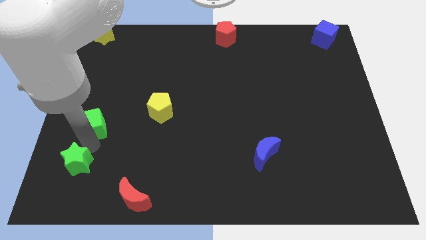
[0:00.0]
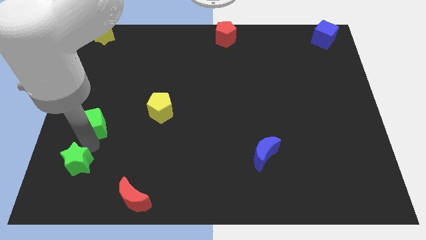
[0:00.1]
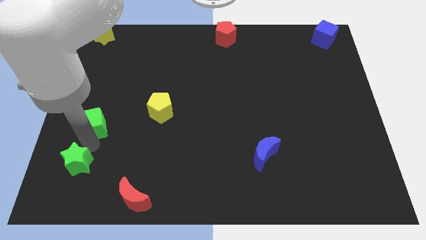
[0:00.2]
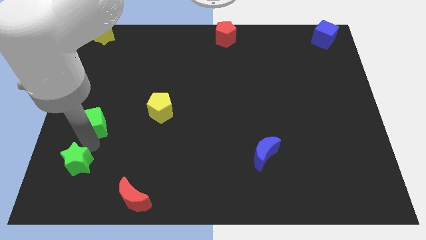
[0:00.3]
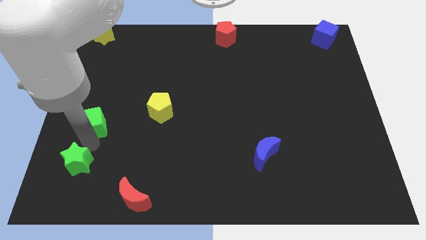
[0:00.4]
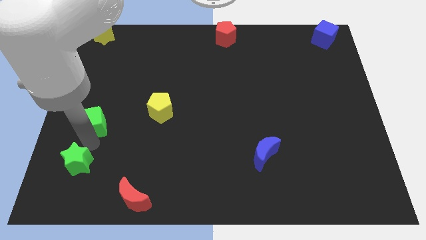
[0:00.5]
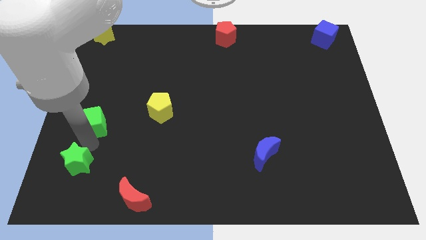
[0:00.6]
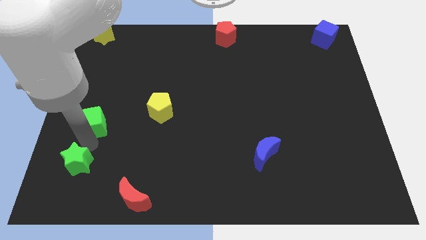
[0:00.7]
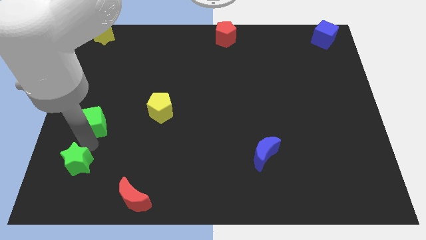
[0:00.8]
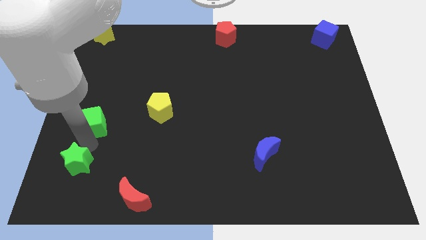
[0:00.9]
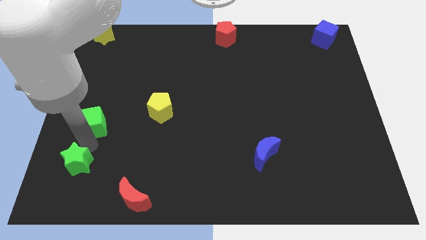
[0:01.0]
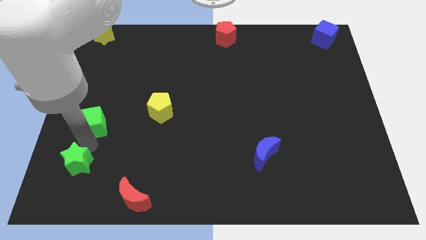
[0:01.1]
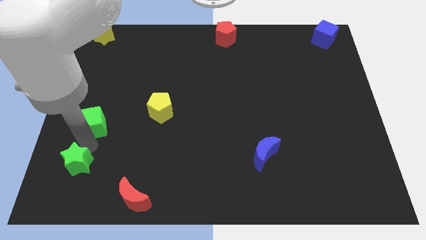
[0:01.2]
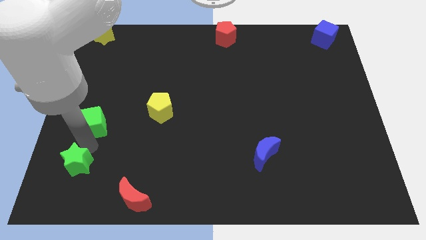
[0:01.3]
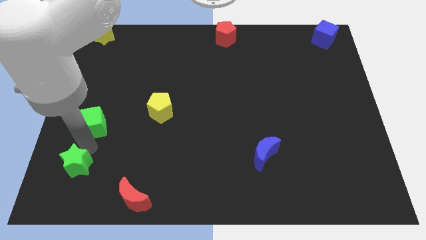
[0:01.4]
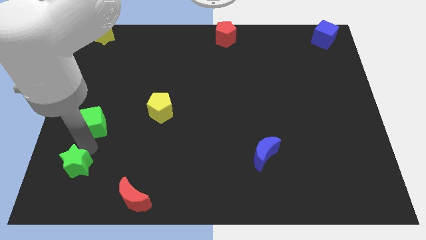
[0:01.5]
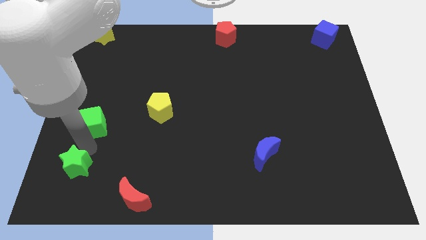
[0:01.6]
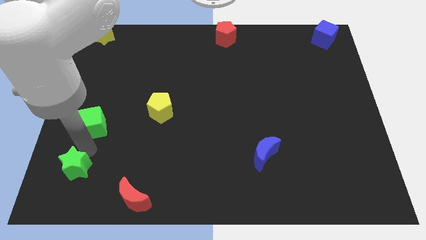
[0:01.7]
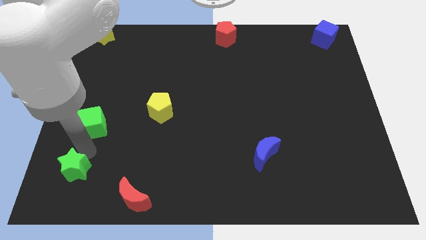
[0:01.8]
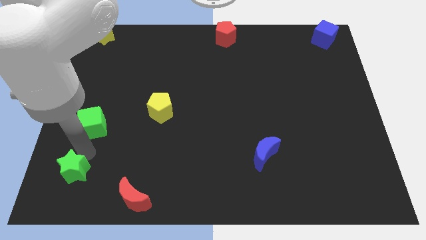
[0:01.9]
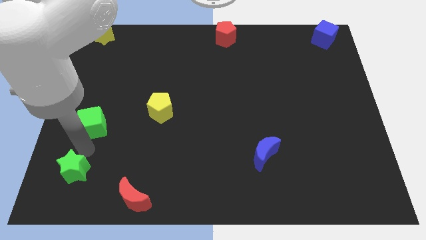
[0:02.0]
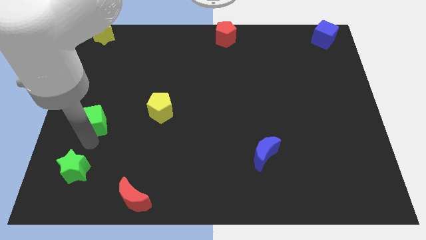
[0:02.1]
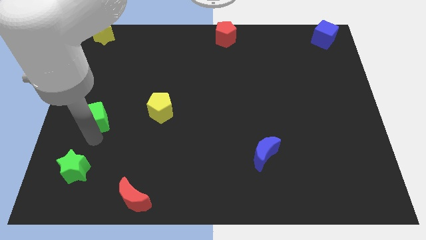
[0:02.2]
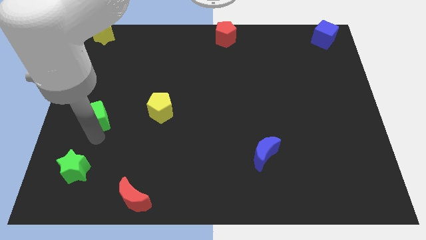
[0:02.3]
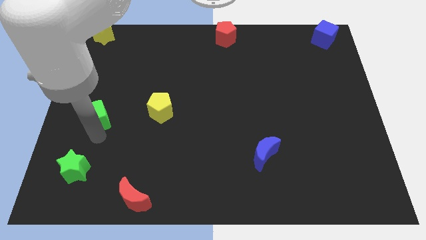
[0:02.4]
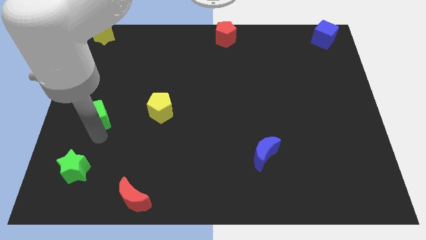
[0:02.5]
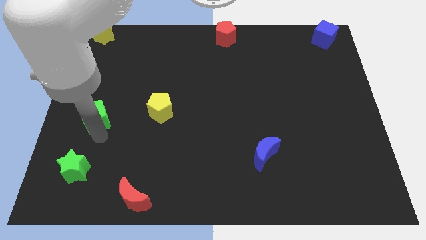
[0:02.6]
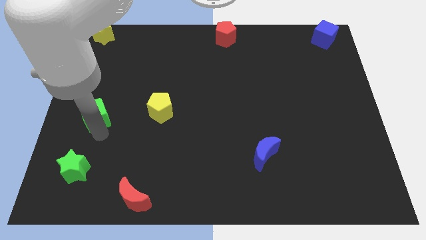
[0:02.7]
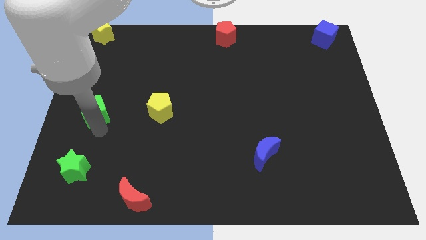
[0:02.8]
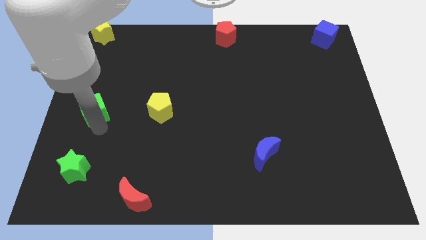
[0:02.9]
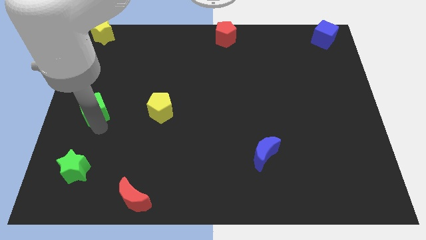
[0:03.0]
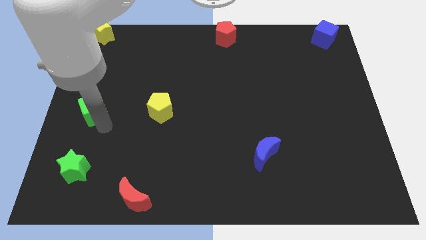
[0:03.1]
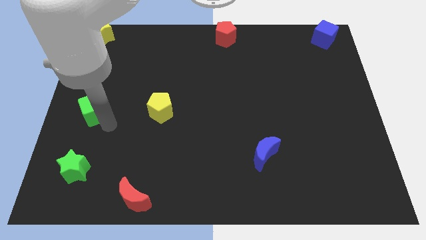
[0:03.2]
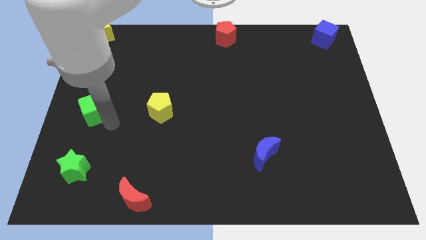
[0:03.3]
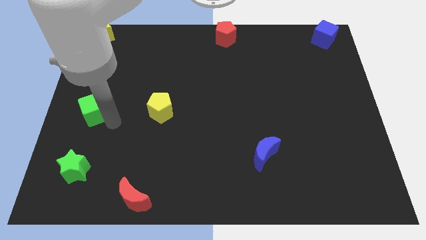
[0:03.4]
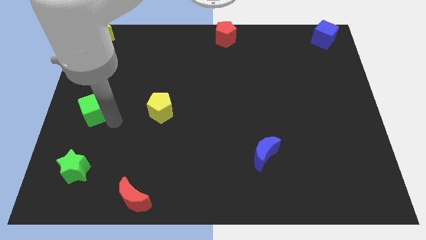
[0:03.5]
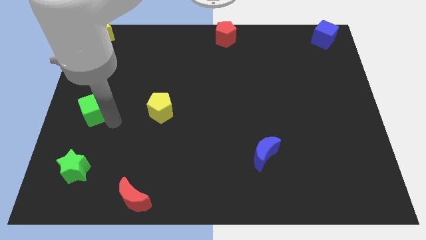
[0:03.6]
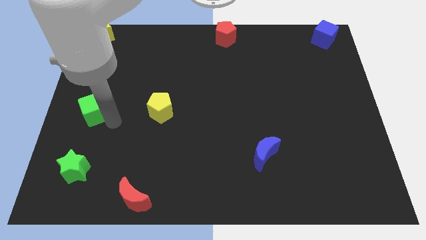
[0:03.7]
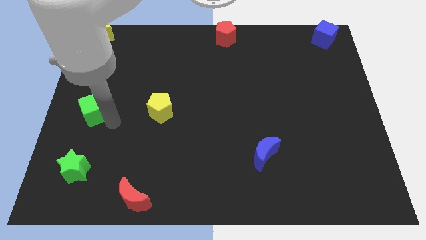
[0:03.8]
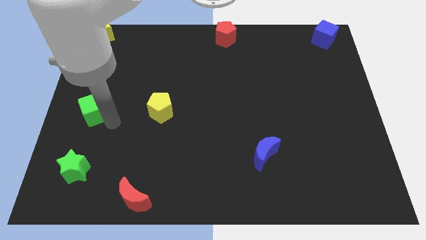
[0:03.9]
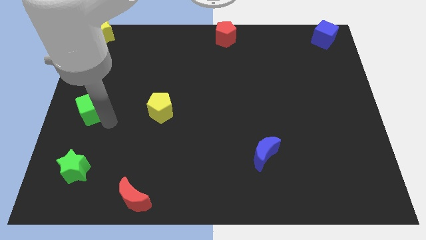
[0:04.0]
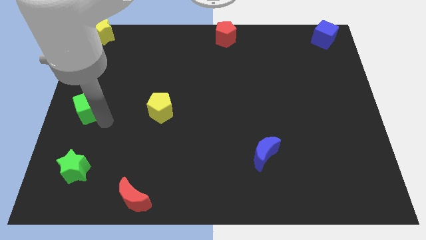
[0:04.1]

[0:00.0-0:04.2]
move green cube slightly to the left

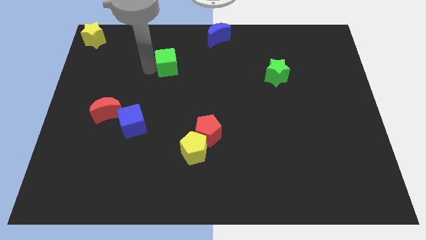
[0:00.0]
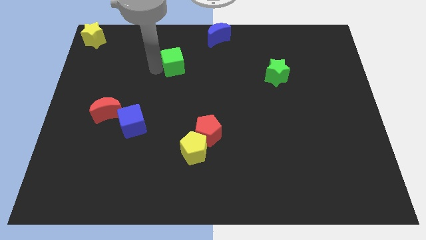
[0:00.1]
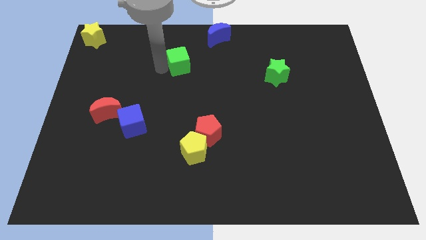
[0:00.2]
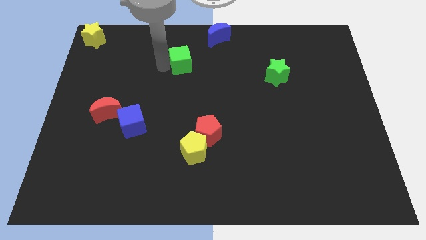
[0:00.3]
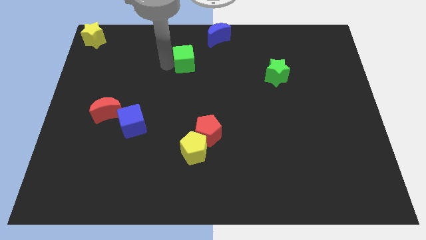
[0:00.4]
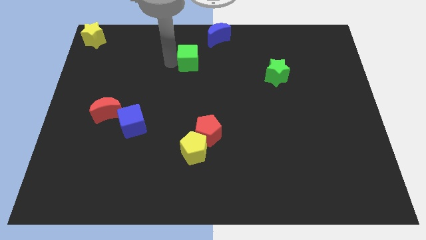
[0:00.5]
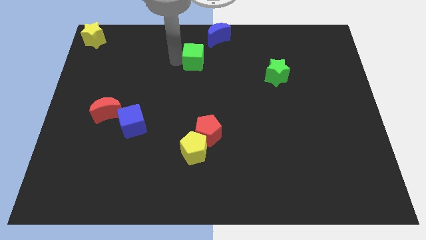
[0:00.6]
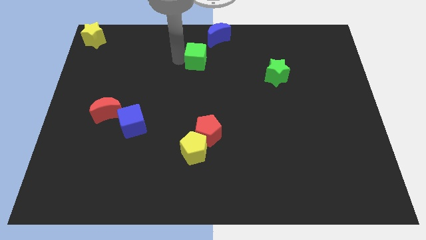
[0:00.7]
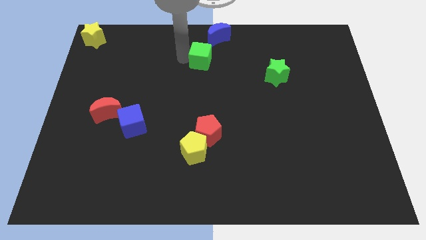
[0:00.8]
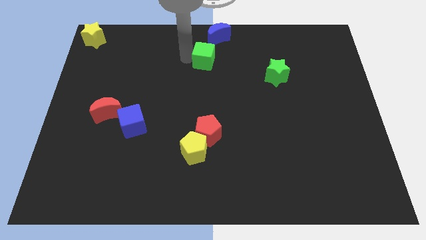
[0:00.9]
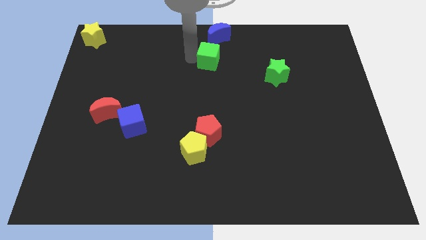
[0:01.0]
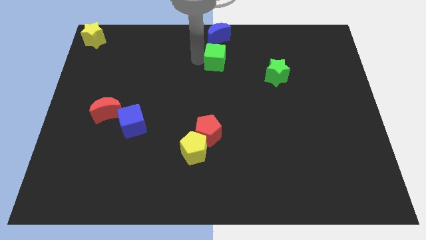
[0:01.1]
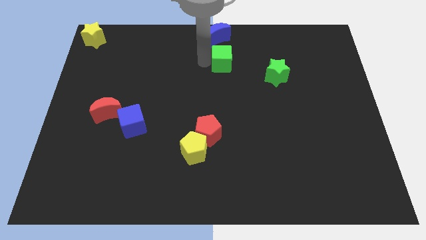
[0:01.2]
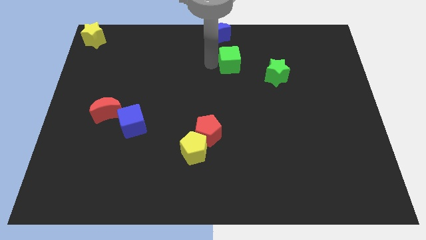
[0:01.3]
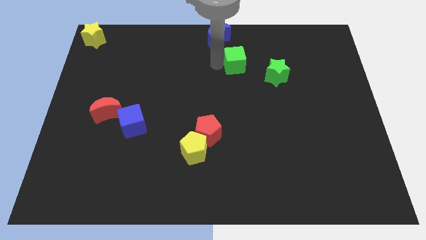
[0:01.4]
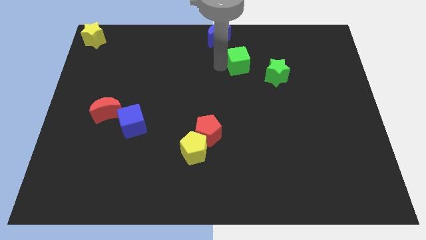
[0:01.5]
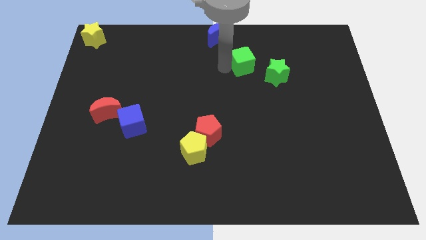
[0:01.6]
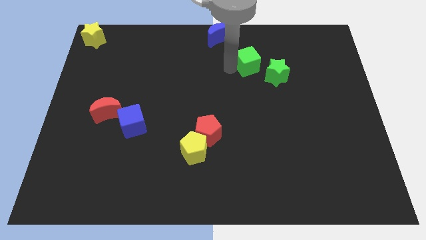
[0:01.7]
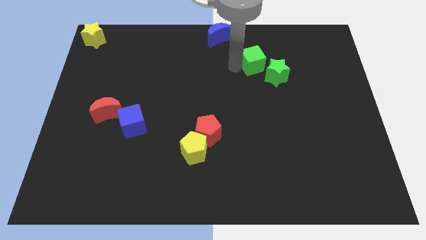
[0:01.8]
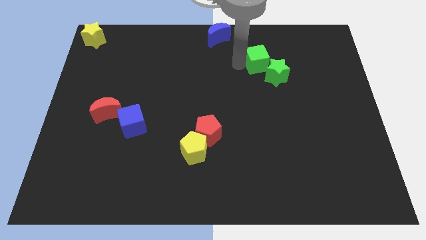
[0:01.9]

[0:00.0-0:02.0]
move the green cube towards the green star

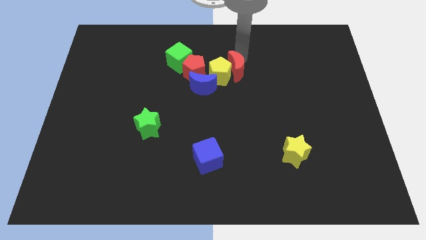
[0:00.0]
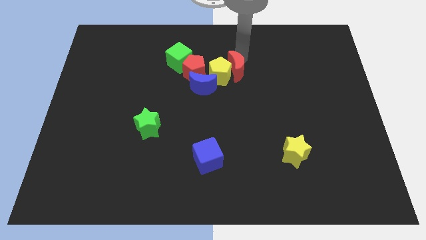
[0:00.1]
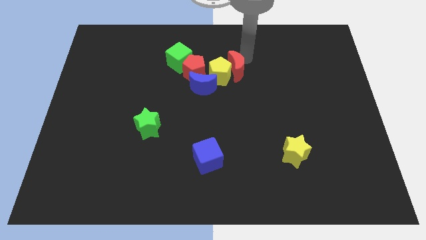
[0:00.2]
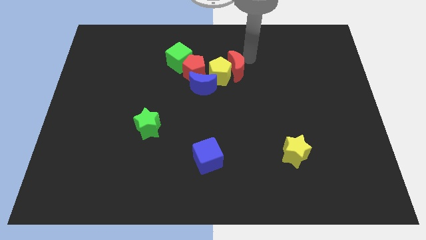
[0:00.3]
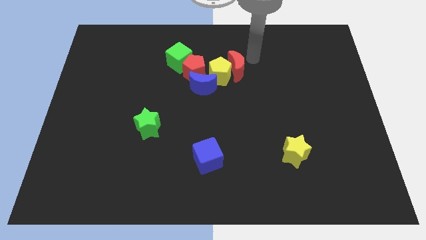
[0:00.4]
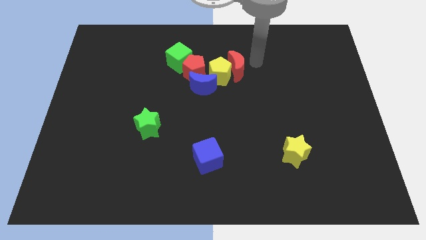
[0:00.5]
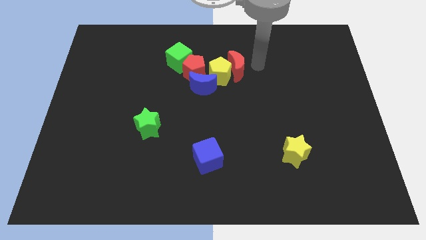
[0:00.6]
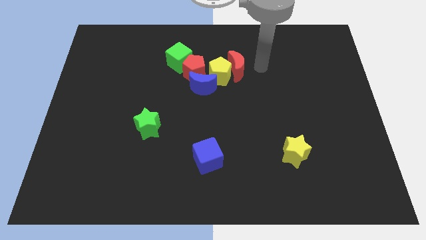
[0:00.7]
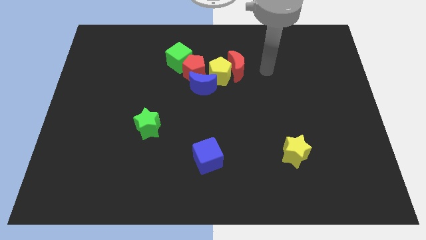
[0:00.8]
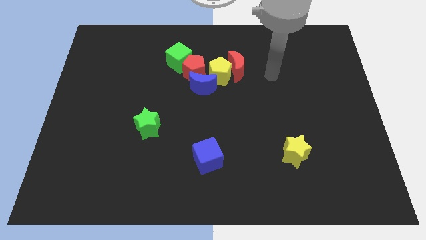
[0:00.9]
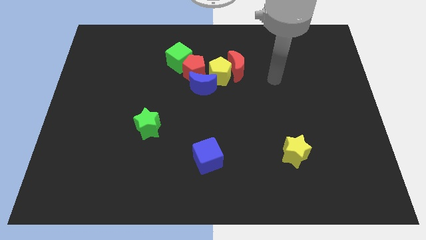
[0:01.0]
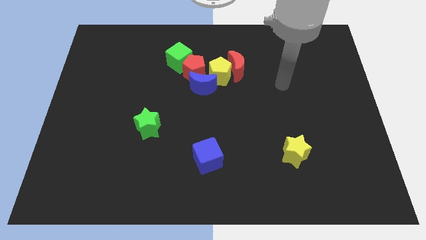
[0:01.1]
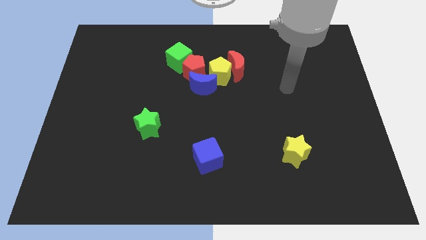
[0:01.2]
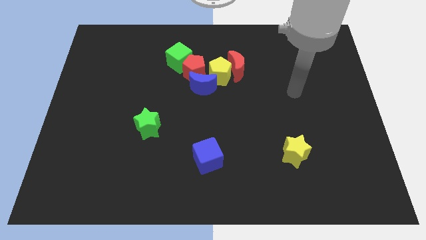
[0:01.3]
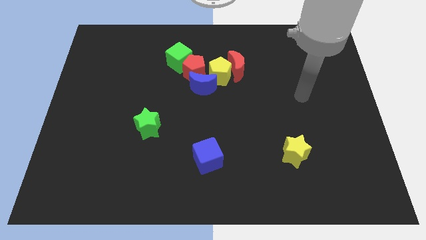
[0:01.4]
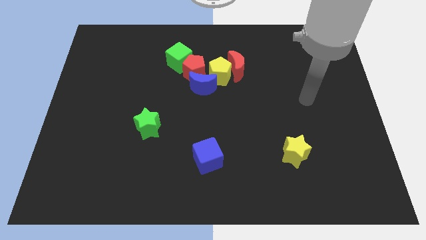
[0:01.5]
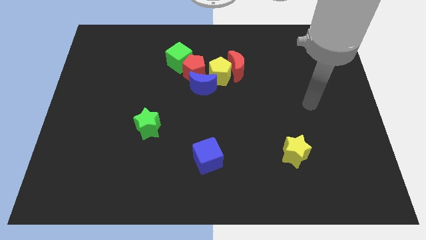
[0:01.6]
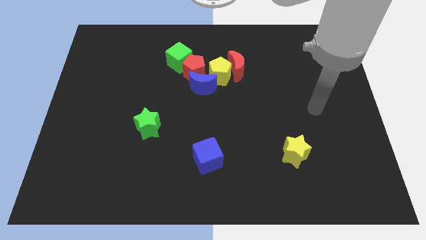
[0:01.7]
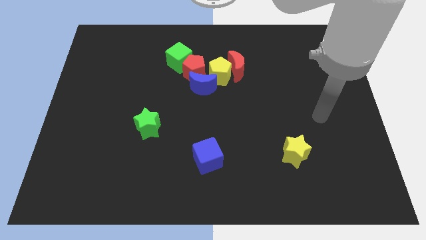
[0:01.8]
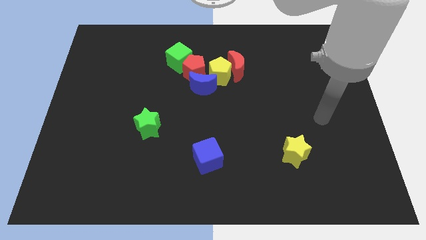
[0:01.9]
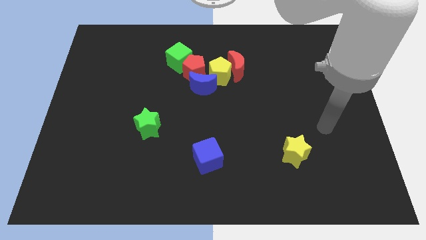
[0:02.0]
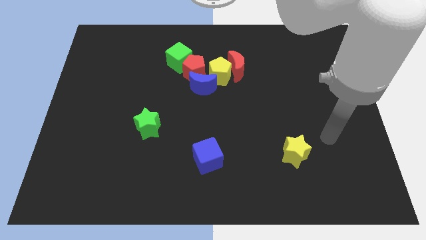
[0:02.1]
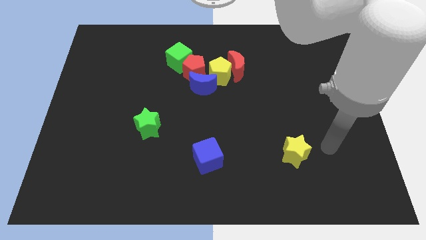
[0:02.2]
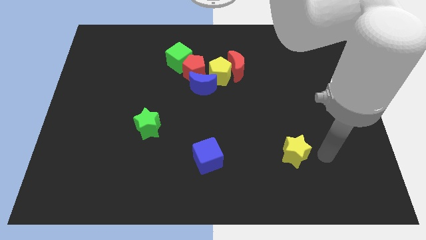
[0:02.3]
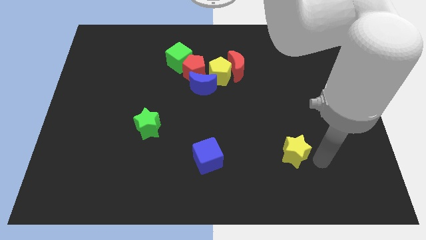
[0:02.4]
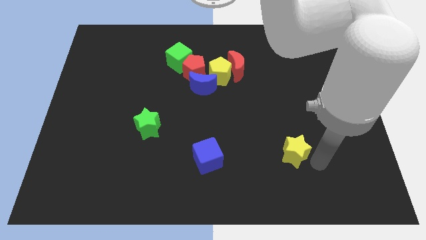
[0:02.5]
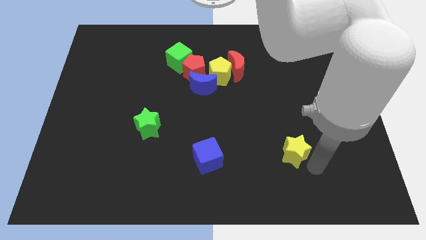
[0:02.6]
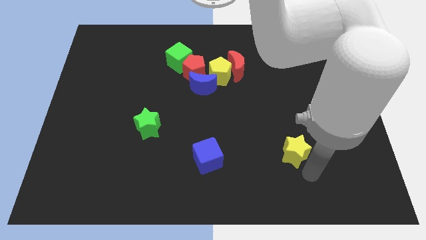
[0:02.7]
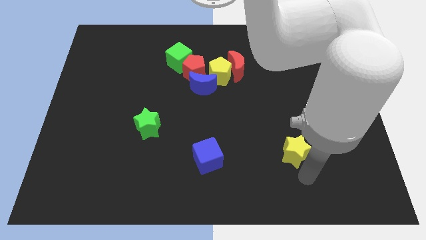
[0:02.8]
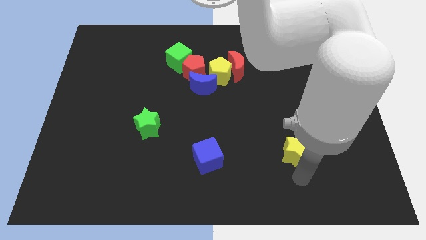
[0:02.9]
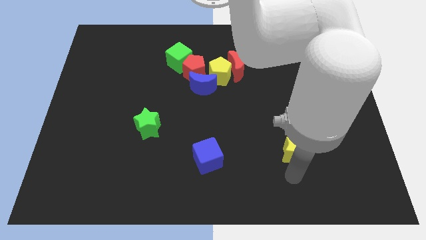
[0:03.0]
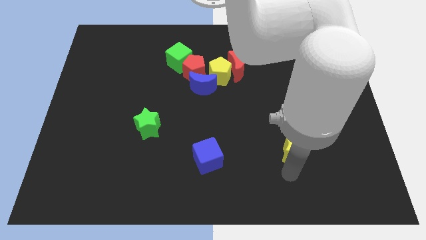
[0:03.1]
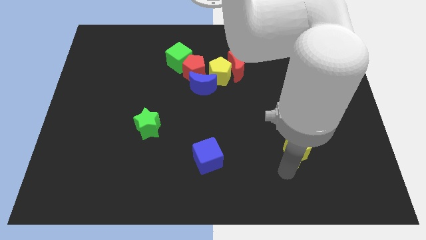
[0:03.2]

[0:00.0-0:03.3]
move your arm below the yellow star
